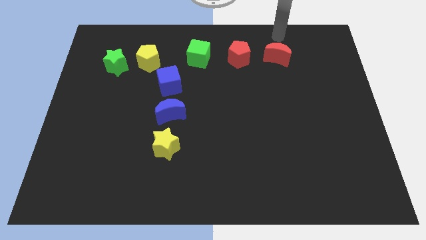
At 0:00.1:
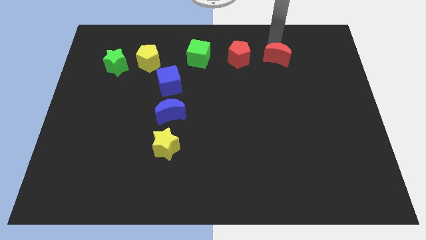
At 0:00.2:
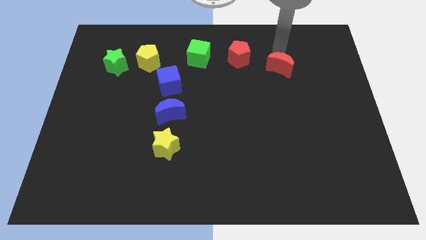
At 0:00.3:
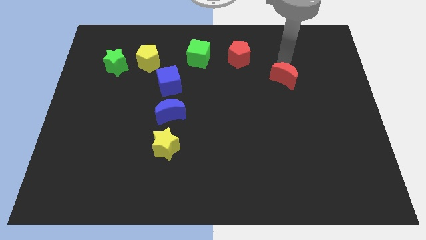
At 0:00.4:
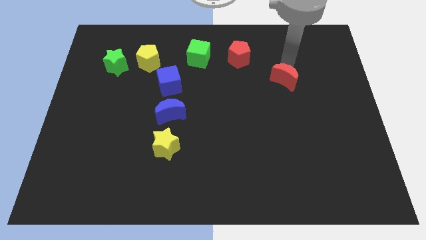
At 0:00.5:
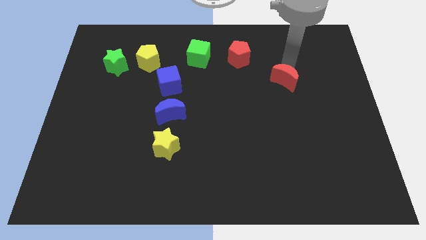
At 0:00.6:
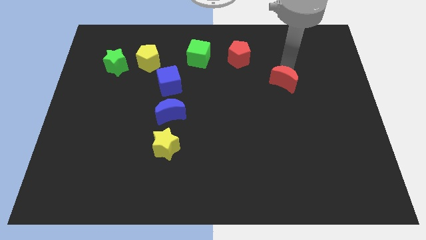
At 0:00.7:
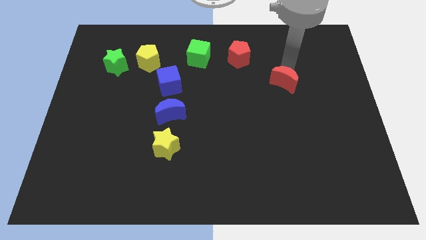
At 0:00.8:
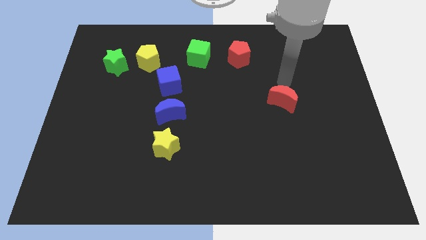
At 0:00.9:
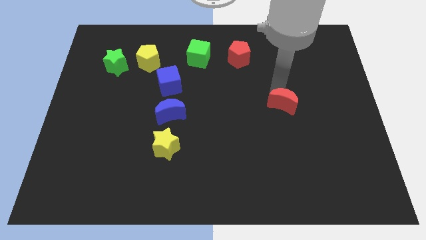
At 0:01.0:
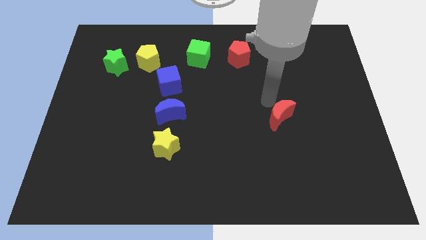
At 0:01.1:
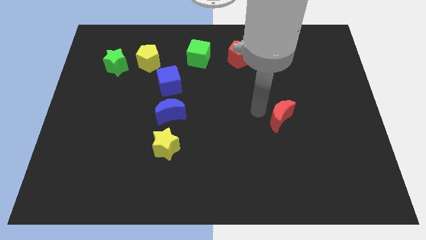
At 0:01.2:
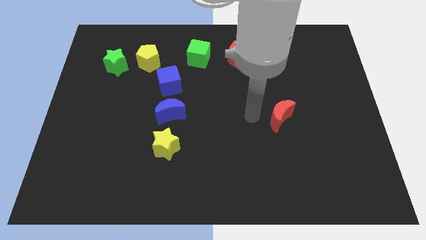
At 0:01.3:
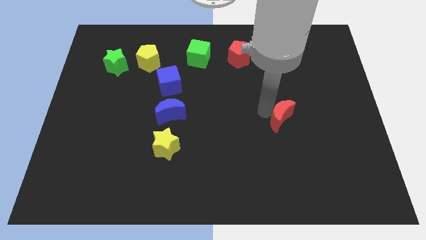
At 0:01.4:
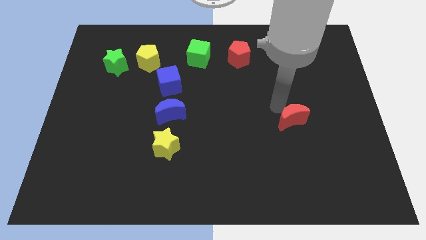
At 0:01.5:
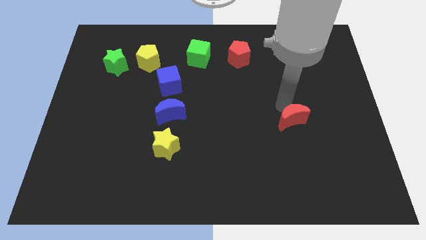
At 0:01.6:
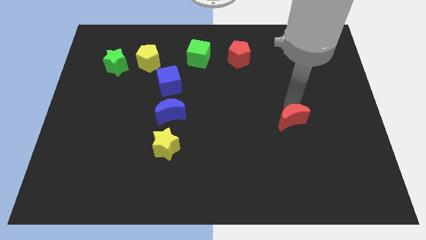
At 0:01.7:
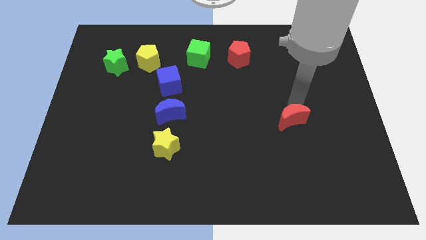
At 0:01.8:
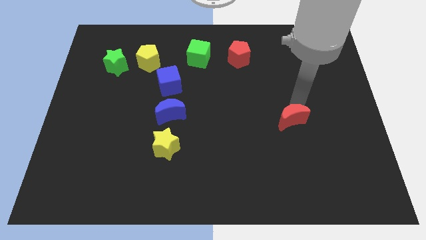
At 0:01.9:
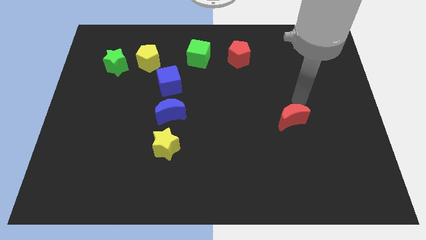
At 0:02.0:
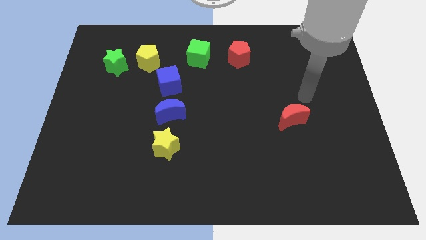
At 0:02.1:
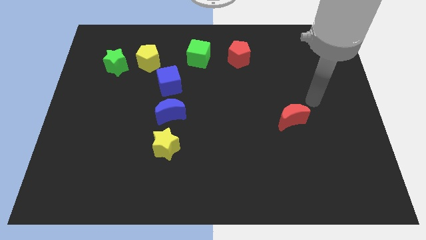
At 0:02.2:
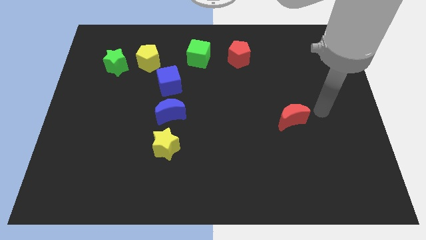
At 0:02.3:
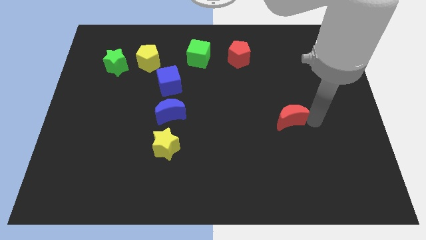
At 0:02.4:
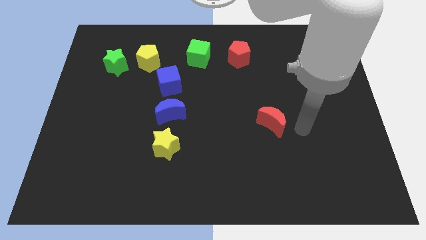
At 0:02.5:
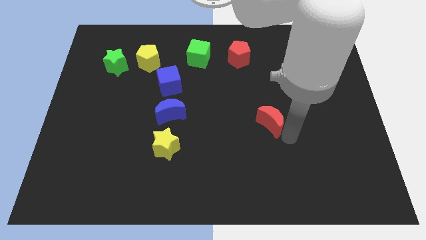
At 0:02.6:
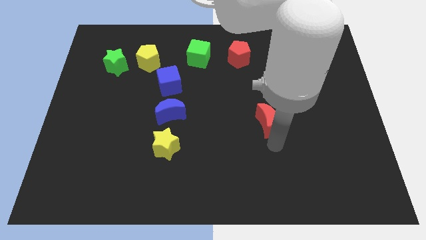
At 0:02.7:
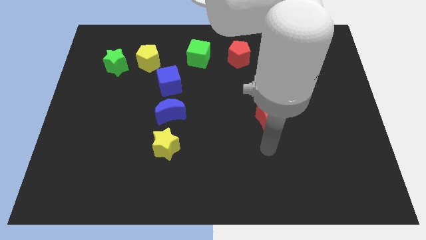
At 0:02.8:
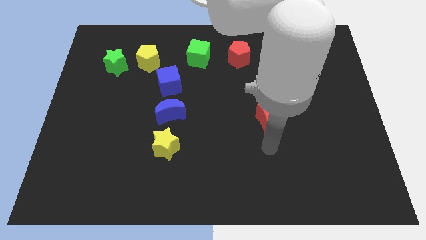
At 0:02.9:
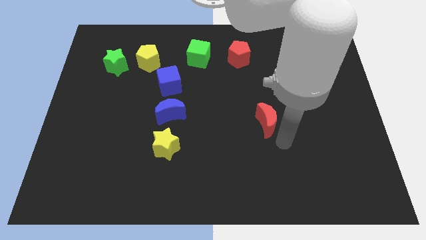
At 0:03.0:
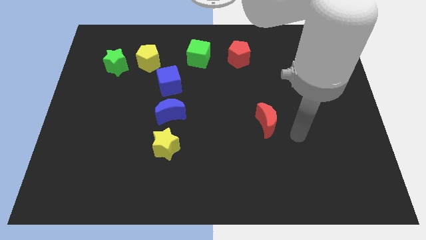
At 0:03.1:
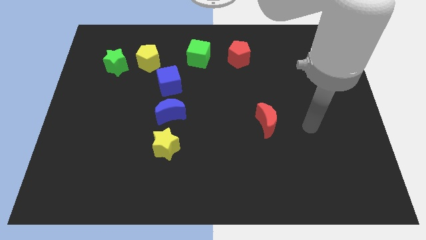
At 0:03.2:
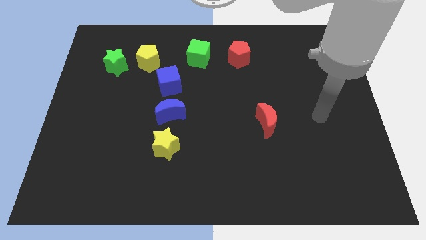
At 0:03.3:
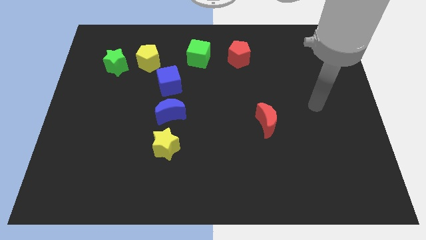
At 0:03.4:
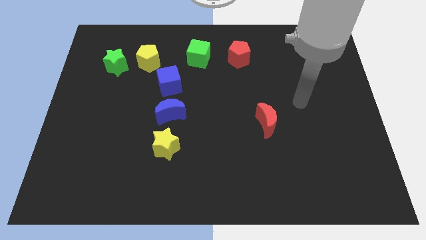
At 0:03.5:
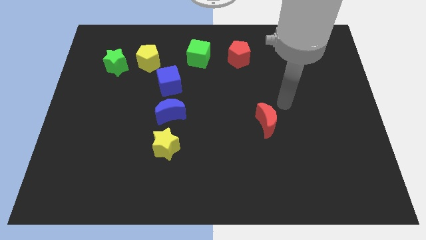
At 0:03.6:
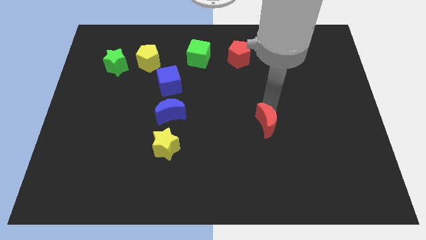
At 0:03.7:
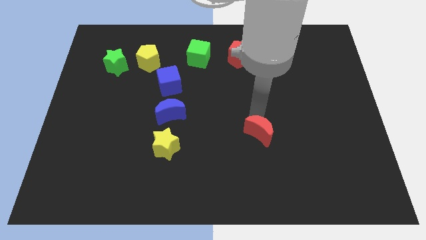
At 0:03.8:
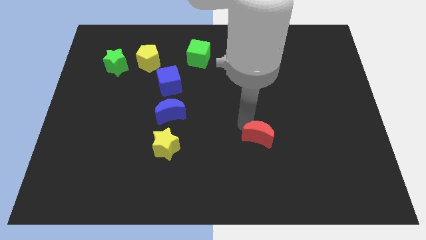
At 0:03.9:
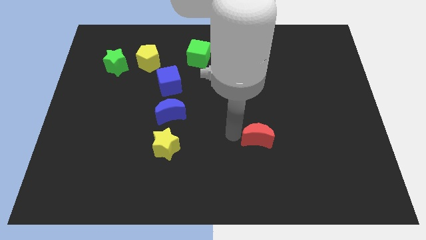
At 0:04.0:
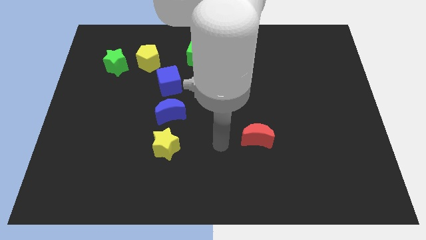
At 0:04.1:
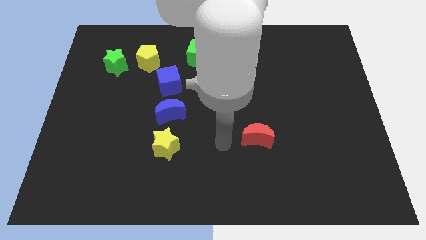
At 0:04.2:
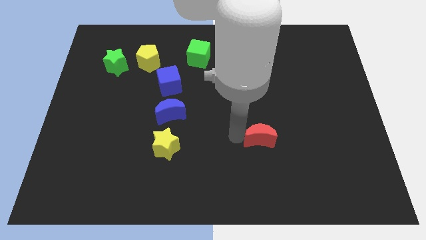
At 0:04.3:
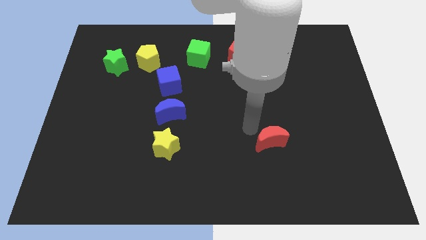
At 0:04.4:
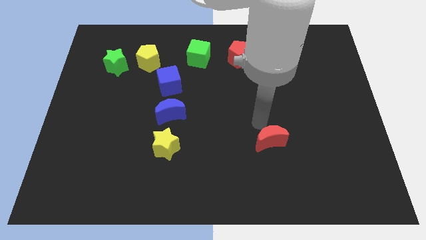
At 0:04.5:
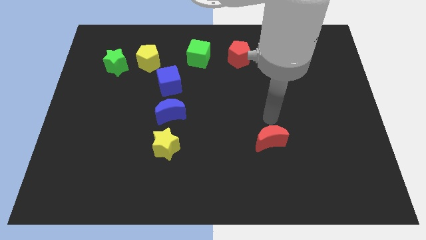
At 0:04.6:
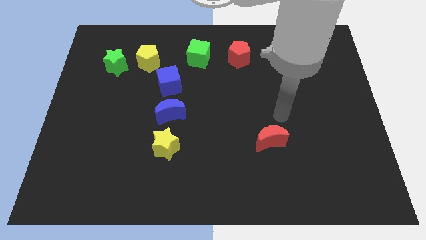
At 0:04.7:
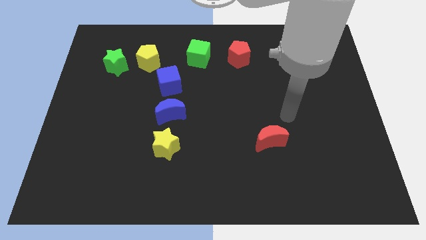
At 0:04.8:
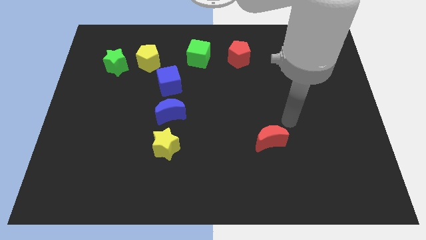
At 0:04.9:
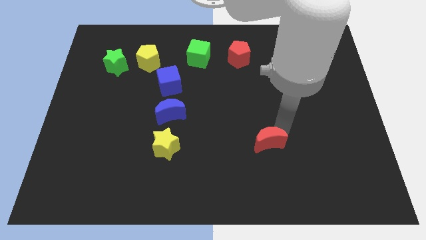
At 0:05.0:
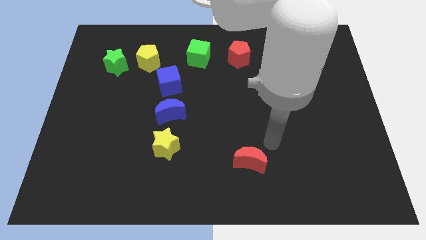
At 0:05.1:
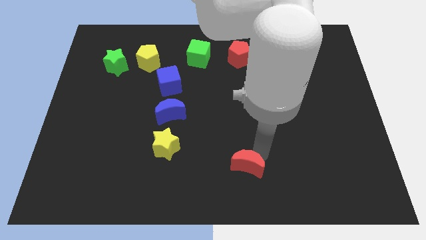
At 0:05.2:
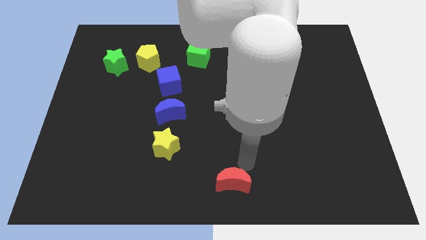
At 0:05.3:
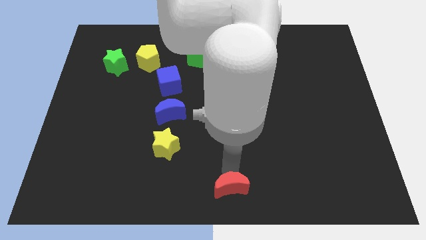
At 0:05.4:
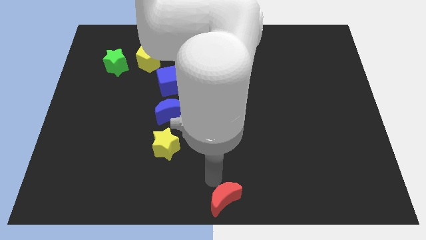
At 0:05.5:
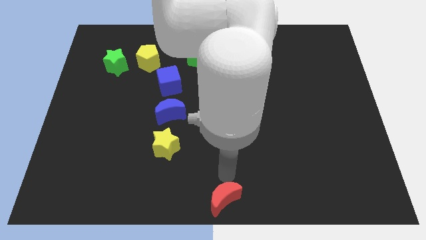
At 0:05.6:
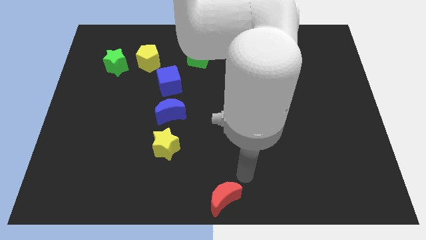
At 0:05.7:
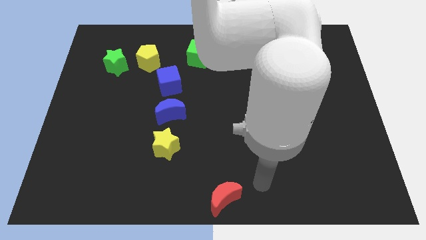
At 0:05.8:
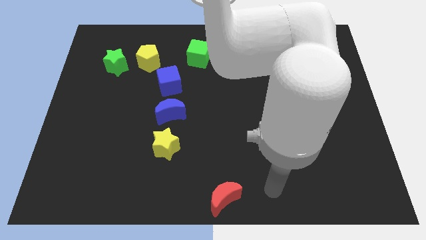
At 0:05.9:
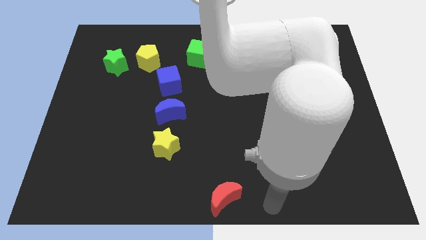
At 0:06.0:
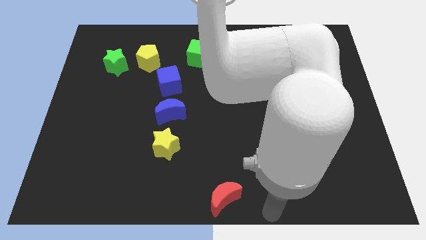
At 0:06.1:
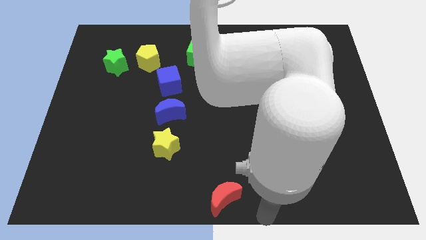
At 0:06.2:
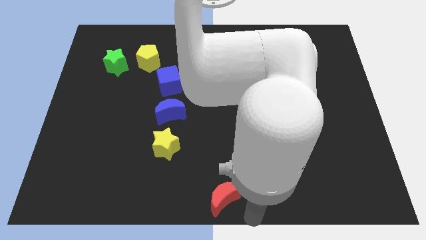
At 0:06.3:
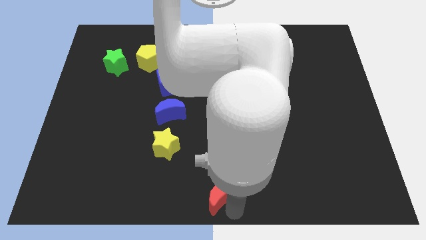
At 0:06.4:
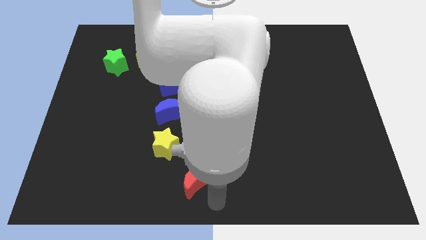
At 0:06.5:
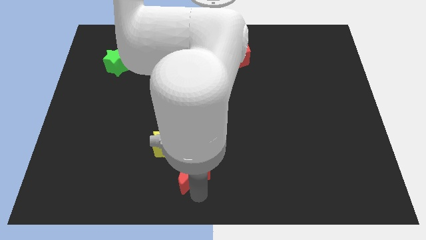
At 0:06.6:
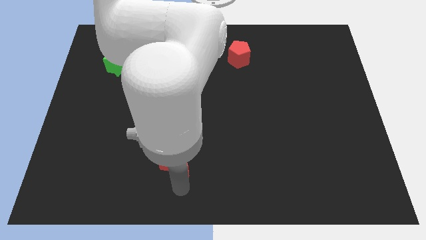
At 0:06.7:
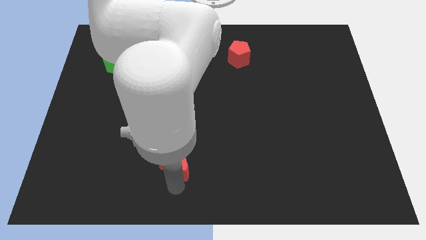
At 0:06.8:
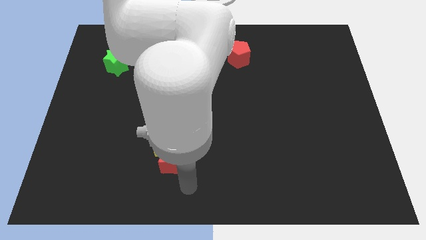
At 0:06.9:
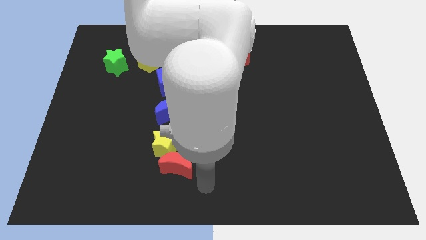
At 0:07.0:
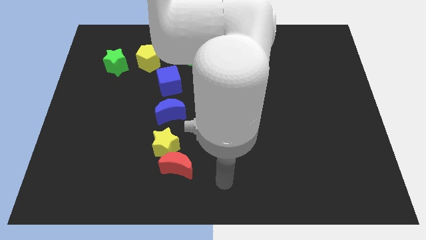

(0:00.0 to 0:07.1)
push the red moon to the bottom side of the yellow star

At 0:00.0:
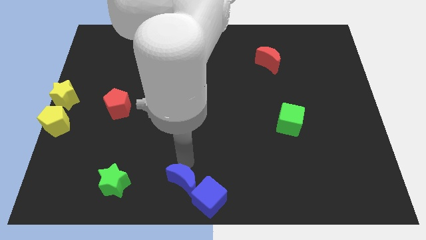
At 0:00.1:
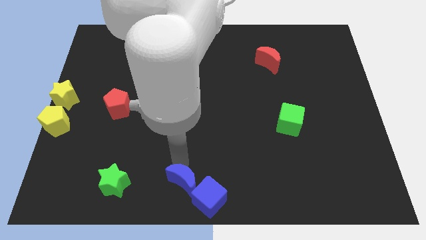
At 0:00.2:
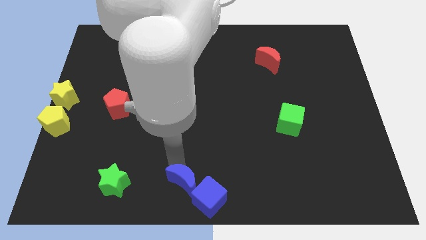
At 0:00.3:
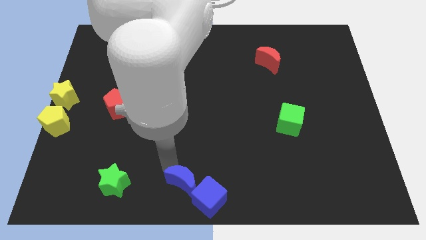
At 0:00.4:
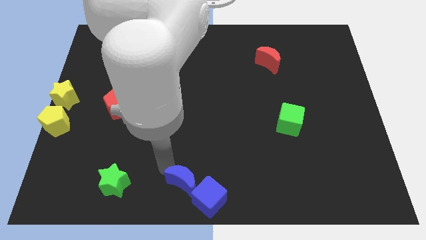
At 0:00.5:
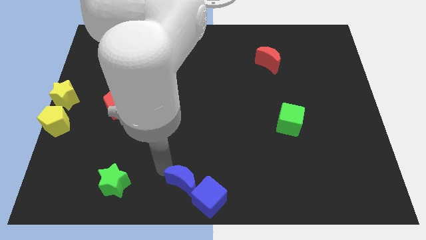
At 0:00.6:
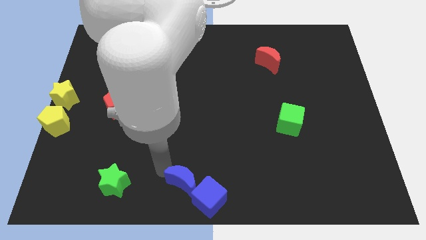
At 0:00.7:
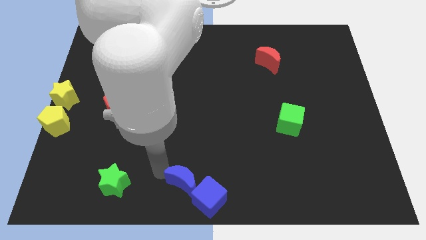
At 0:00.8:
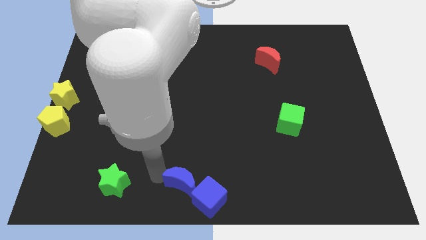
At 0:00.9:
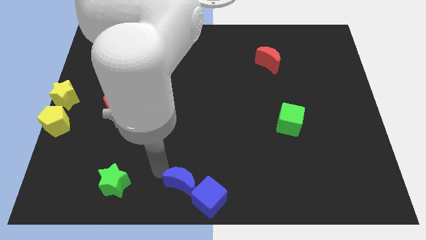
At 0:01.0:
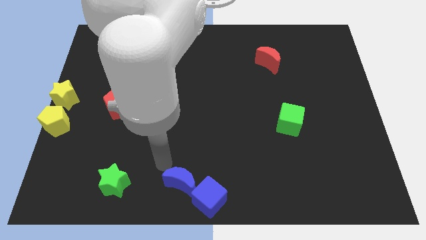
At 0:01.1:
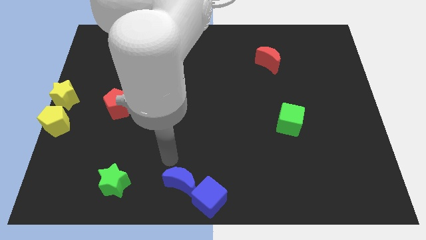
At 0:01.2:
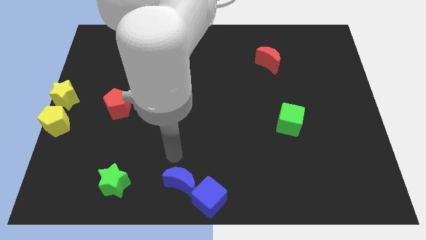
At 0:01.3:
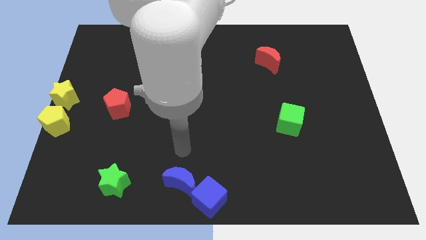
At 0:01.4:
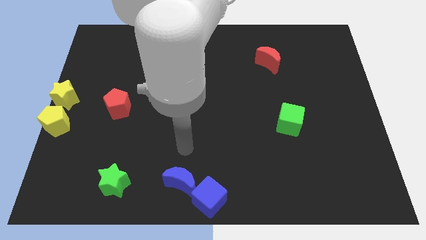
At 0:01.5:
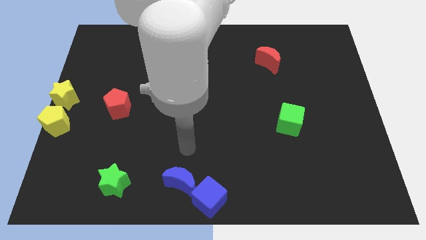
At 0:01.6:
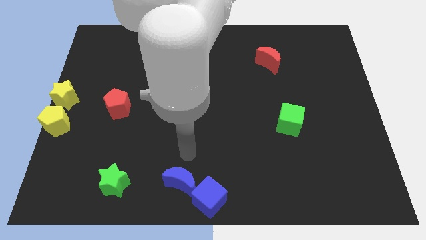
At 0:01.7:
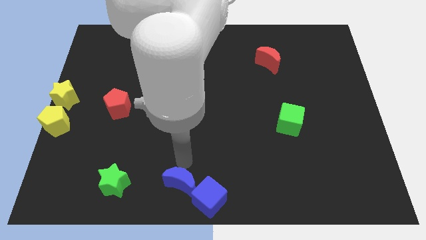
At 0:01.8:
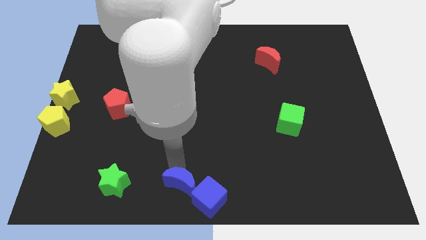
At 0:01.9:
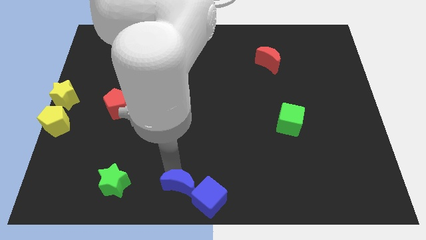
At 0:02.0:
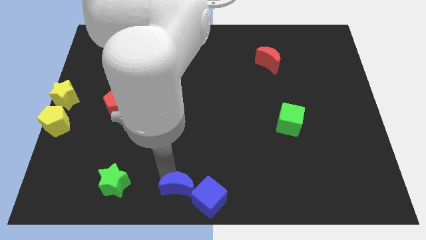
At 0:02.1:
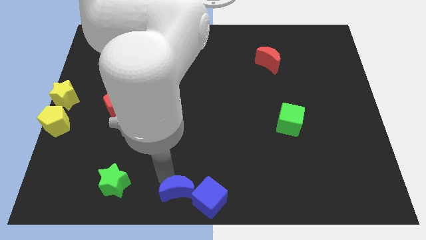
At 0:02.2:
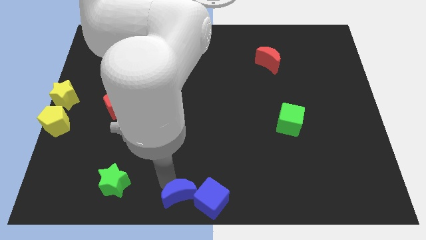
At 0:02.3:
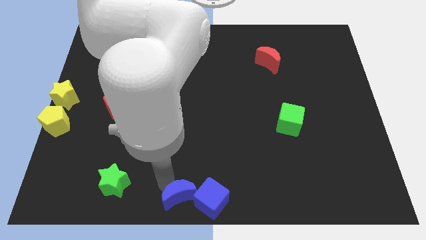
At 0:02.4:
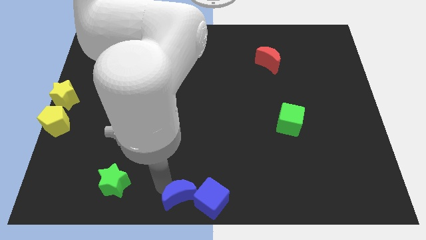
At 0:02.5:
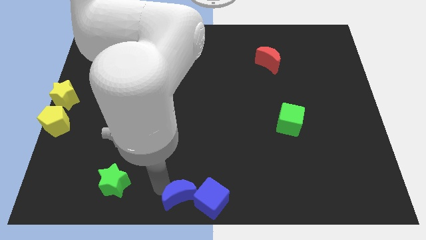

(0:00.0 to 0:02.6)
move blue moon left beside blue cube
